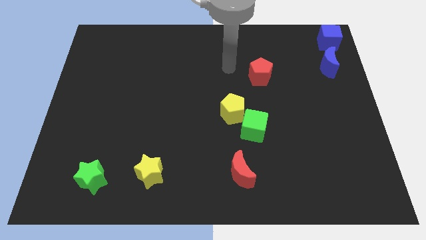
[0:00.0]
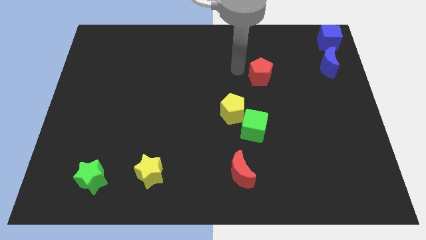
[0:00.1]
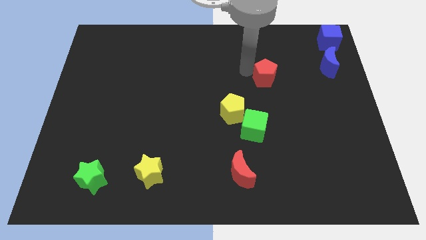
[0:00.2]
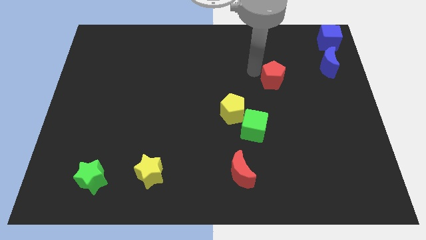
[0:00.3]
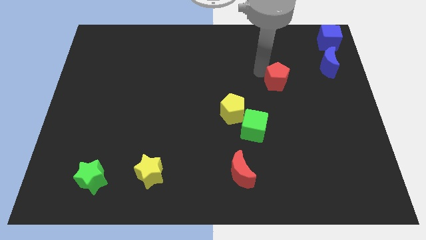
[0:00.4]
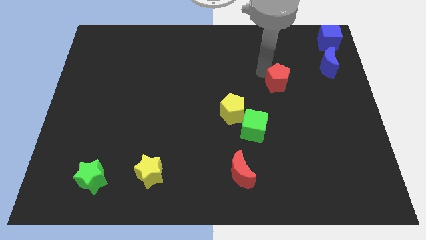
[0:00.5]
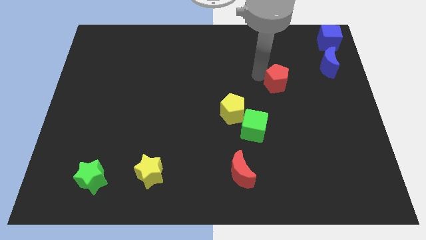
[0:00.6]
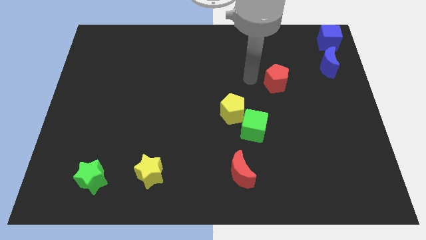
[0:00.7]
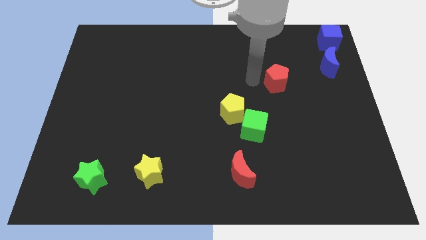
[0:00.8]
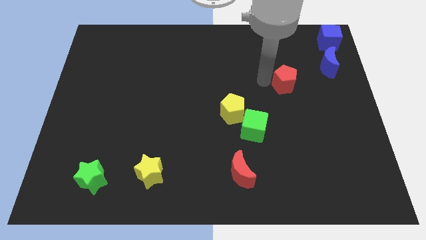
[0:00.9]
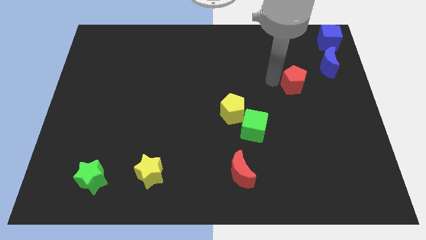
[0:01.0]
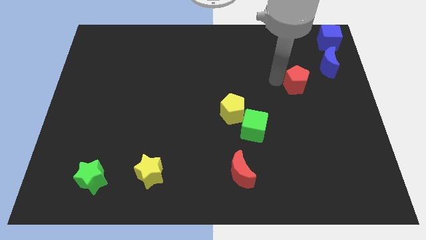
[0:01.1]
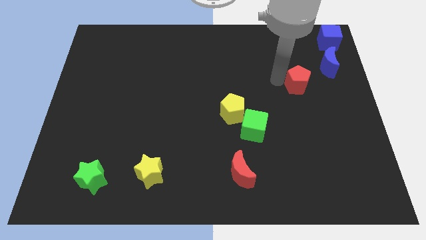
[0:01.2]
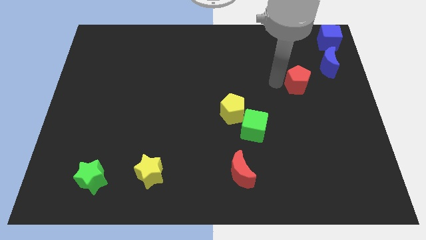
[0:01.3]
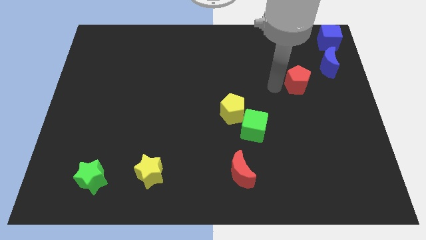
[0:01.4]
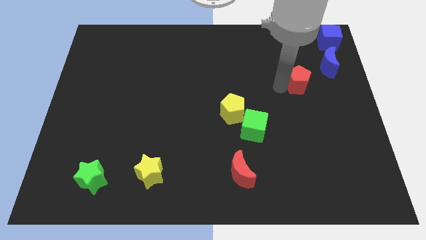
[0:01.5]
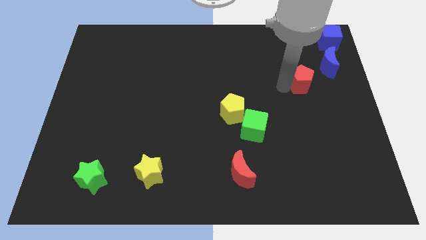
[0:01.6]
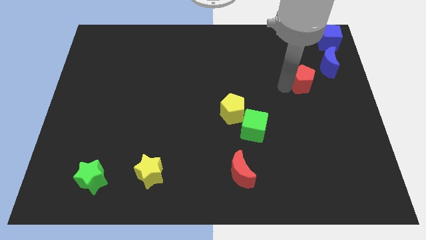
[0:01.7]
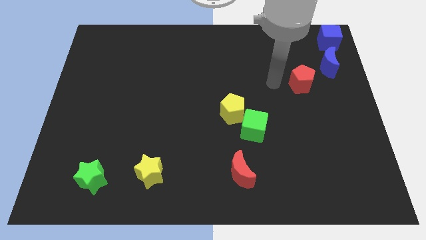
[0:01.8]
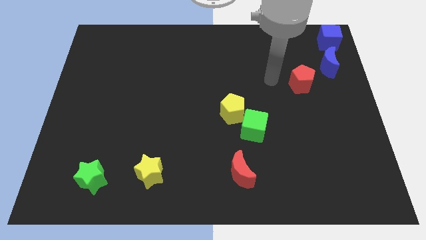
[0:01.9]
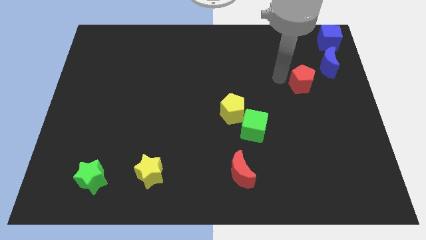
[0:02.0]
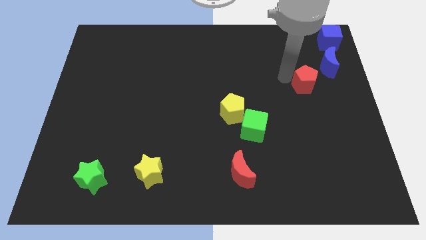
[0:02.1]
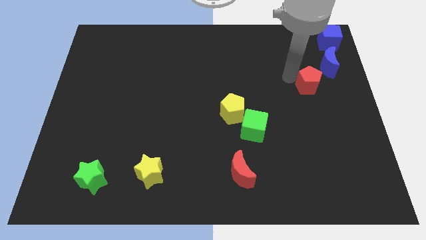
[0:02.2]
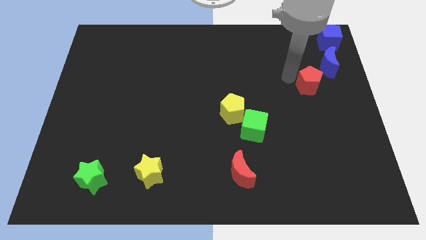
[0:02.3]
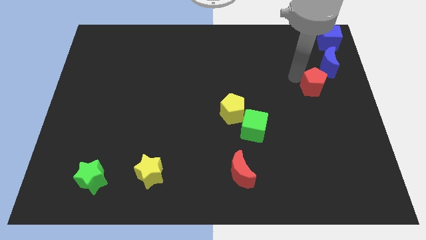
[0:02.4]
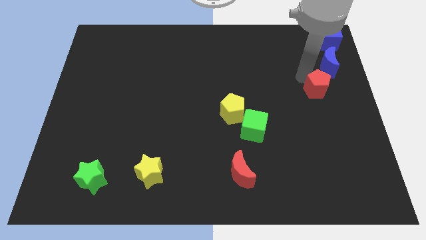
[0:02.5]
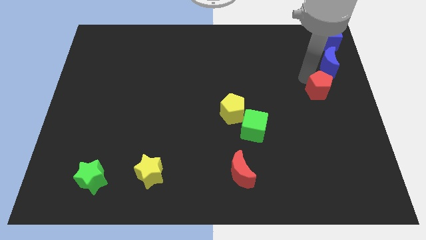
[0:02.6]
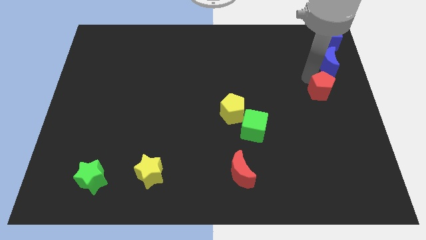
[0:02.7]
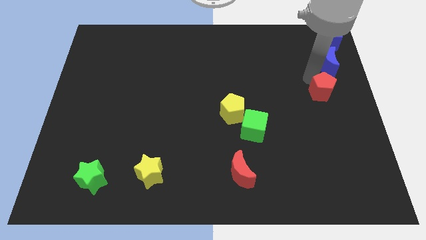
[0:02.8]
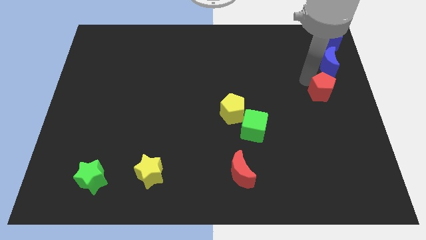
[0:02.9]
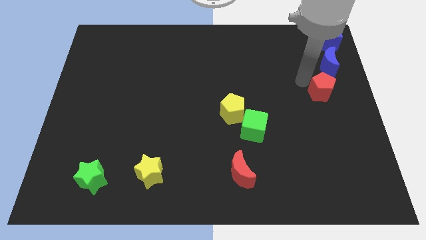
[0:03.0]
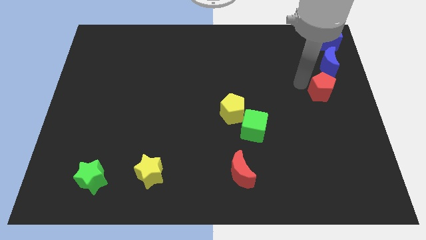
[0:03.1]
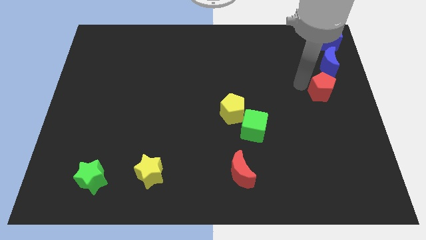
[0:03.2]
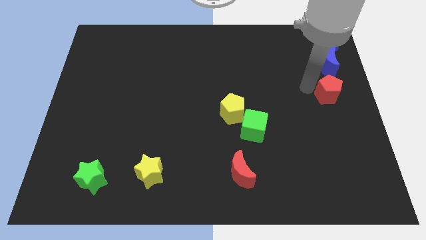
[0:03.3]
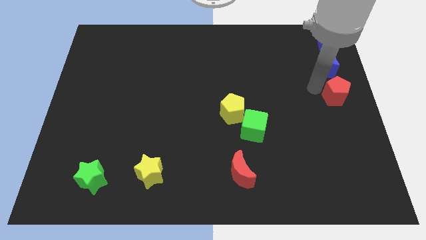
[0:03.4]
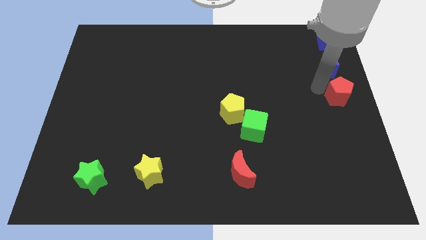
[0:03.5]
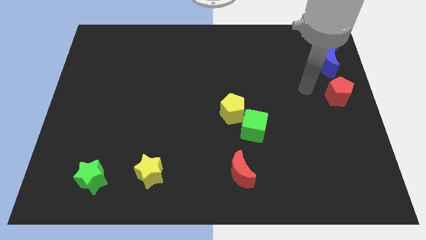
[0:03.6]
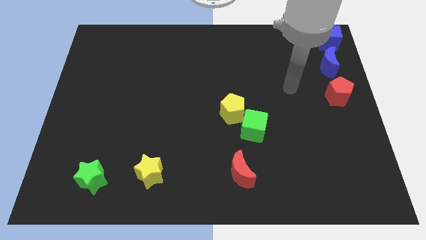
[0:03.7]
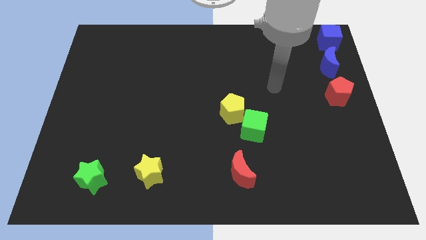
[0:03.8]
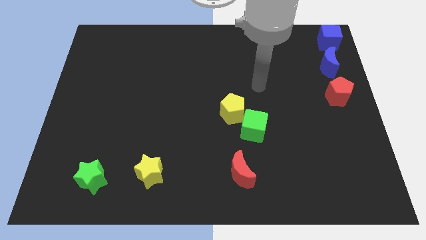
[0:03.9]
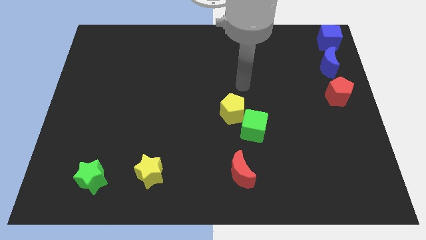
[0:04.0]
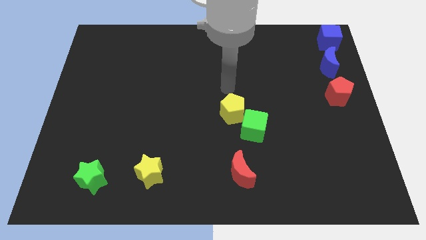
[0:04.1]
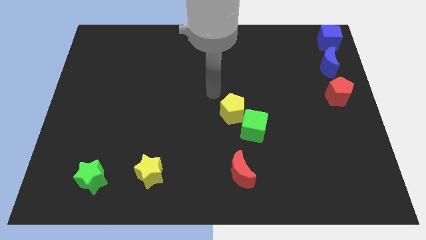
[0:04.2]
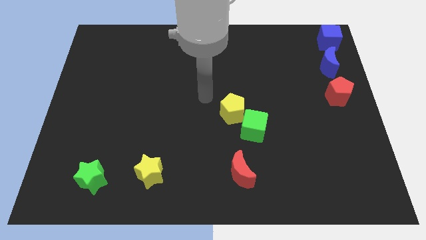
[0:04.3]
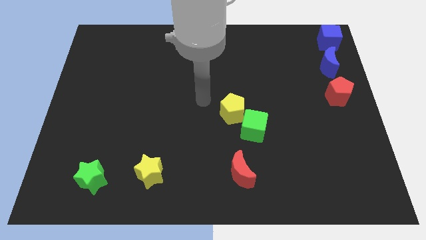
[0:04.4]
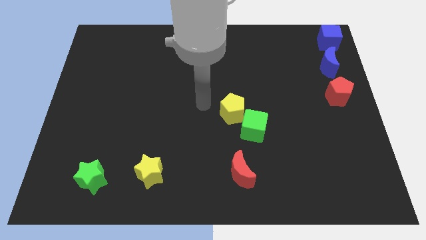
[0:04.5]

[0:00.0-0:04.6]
put the red pentagon below the blue crescent

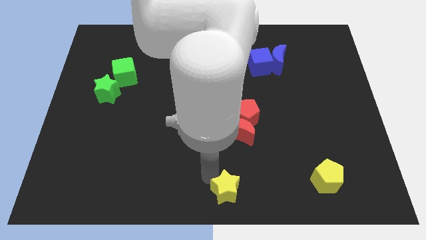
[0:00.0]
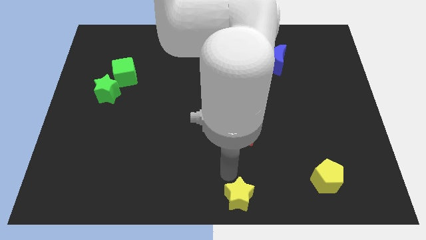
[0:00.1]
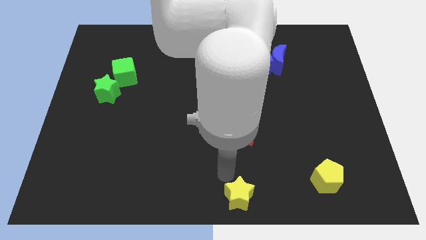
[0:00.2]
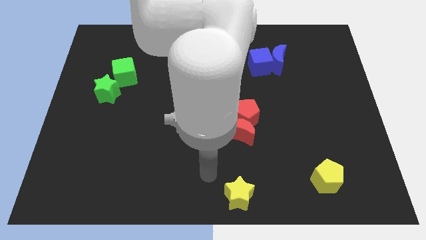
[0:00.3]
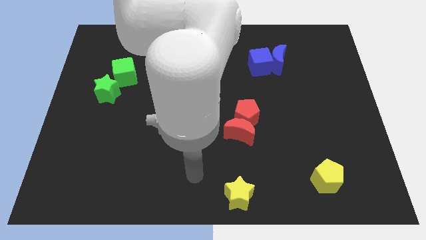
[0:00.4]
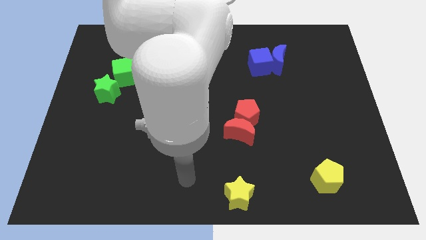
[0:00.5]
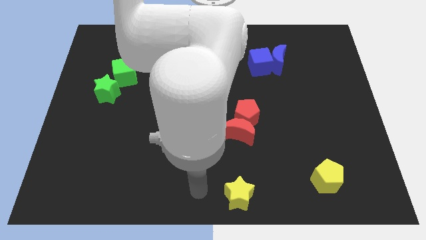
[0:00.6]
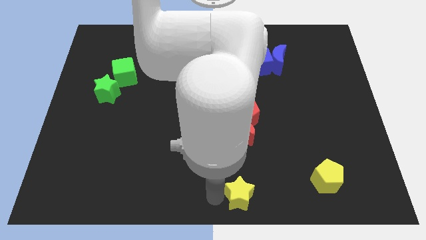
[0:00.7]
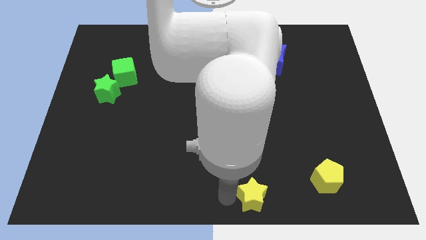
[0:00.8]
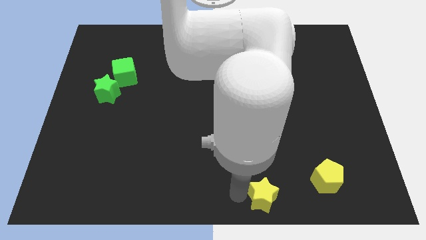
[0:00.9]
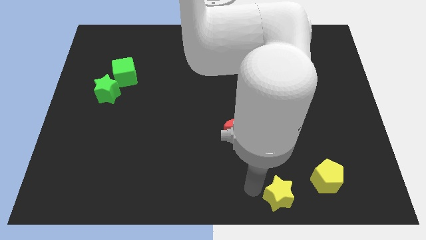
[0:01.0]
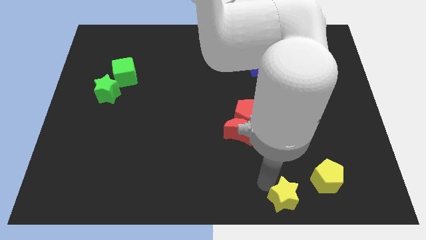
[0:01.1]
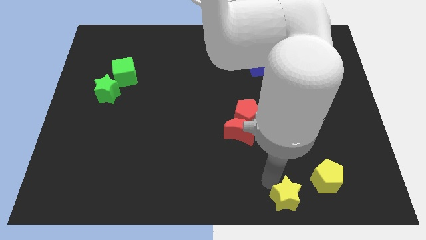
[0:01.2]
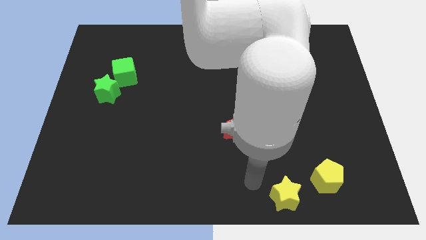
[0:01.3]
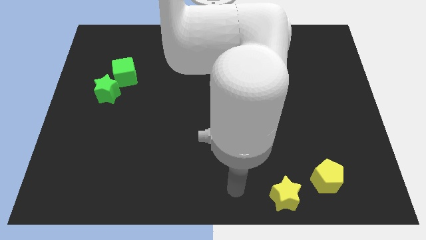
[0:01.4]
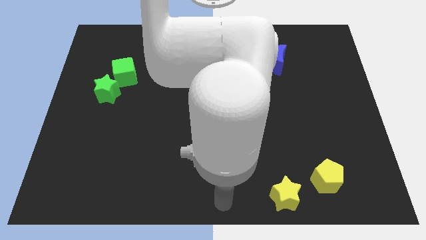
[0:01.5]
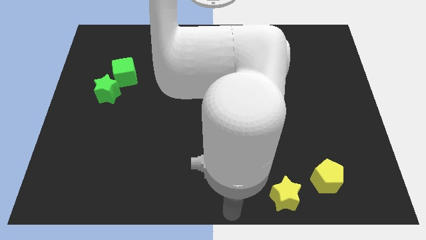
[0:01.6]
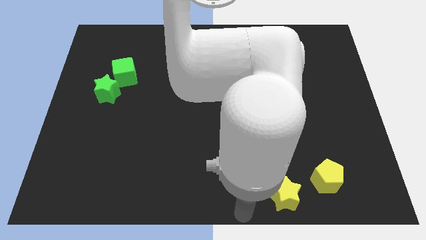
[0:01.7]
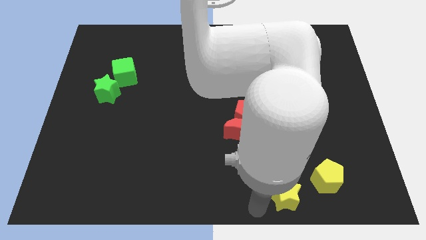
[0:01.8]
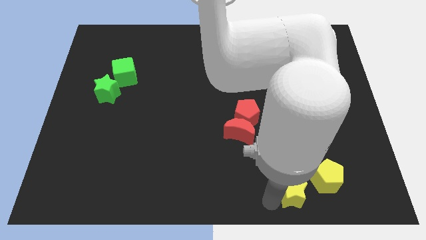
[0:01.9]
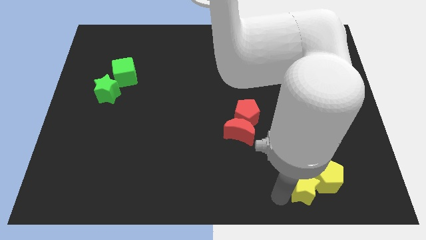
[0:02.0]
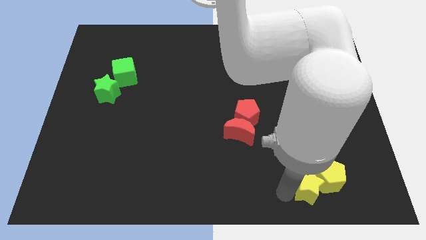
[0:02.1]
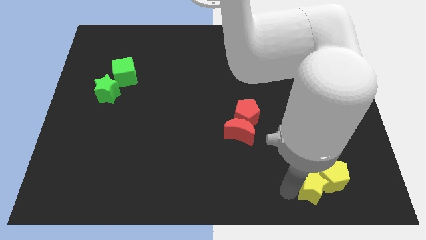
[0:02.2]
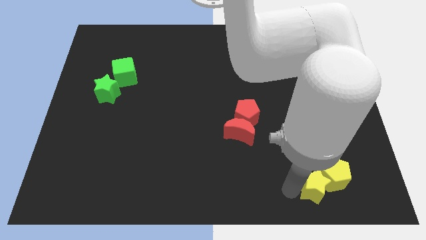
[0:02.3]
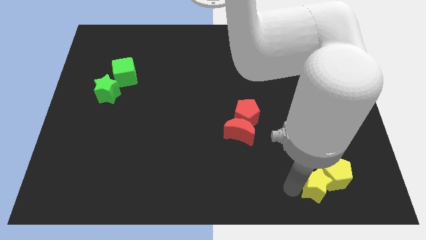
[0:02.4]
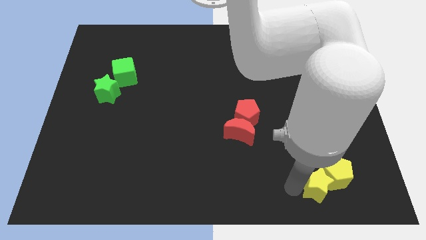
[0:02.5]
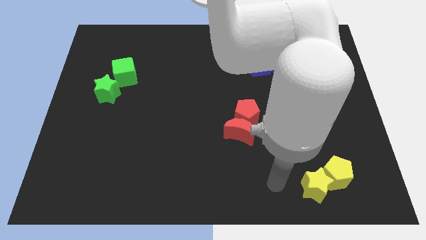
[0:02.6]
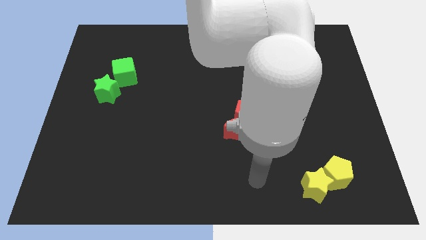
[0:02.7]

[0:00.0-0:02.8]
push the yellow star into the yellow pentagon

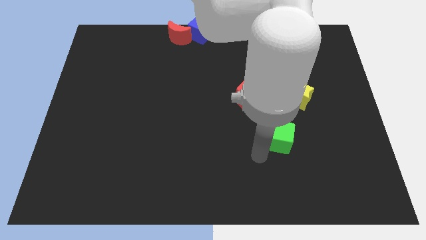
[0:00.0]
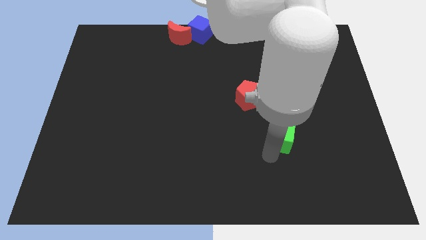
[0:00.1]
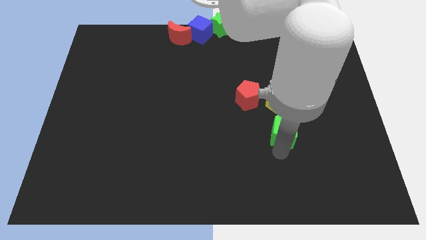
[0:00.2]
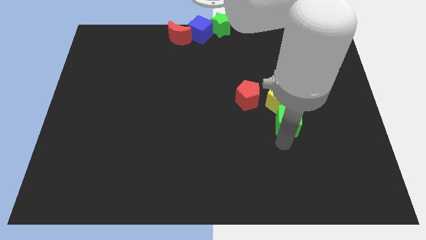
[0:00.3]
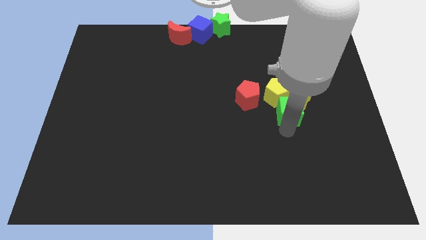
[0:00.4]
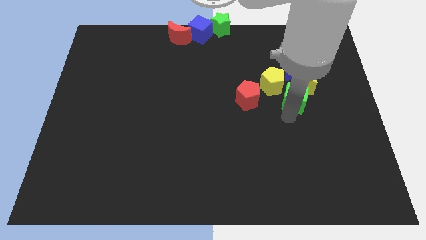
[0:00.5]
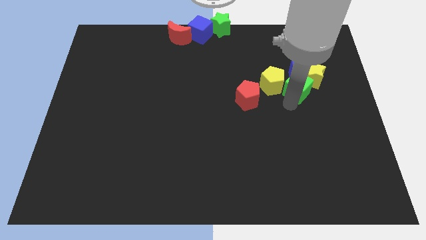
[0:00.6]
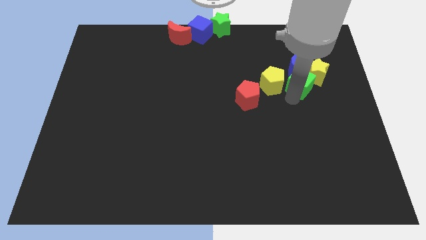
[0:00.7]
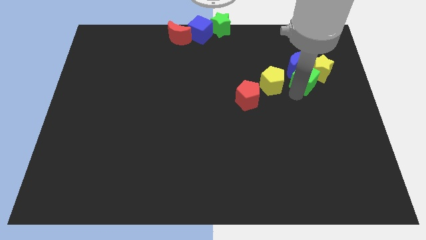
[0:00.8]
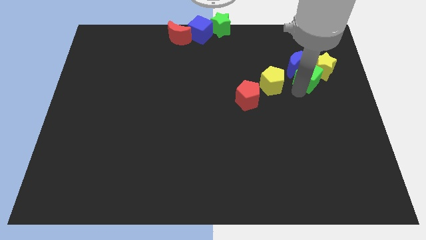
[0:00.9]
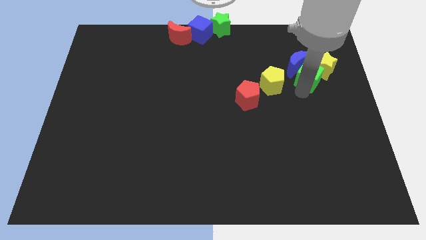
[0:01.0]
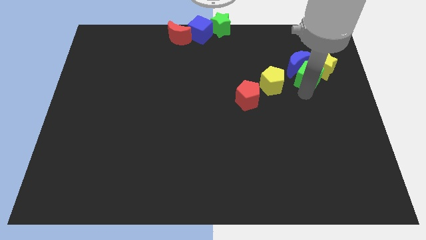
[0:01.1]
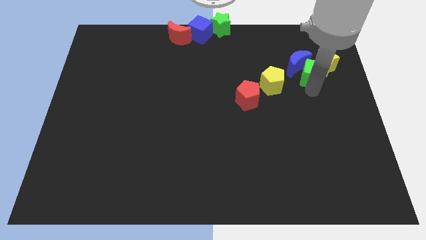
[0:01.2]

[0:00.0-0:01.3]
put the green cube and yellow star together
